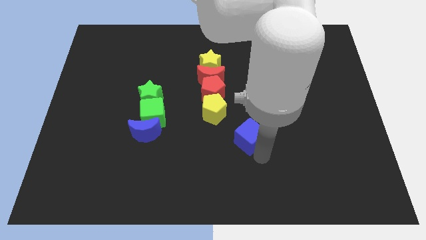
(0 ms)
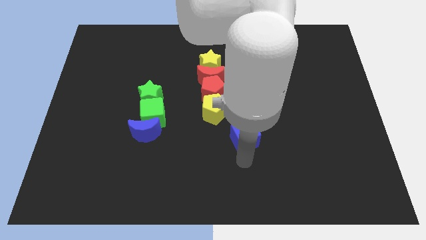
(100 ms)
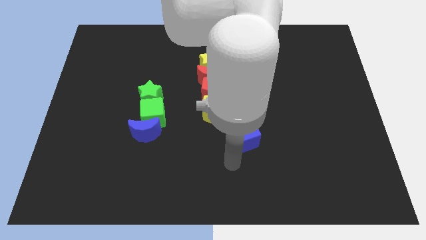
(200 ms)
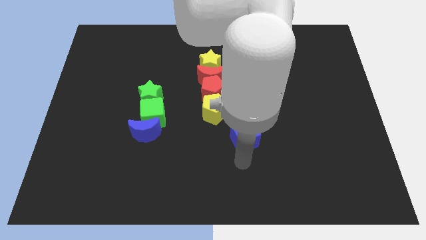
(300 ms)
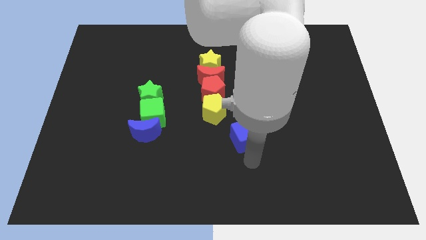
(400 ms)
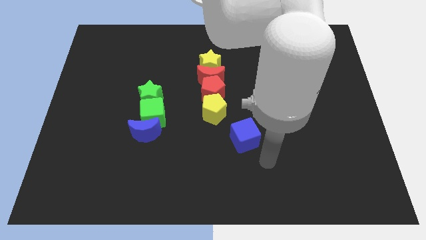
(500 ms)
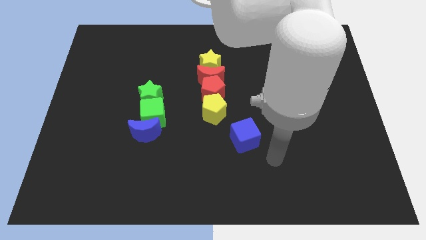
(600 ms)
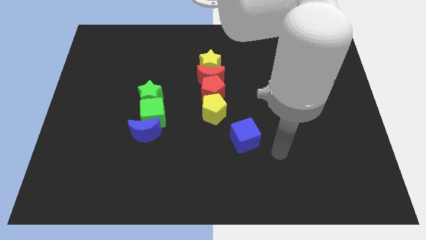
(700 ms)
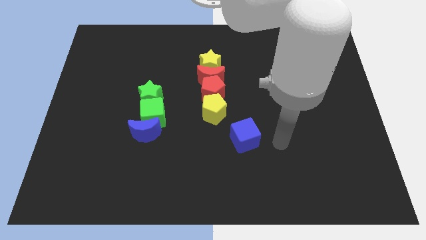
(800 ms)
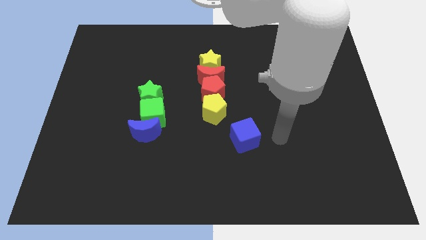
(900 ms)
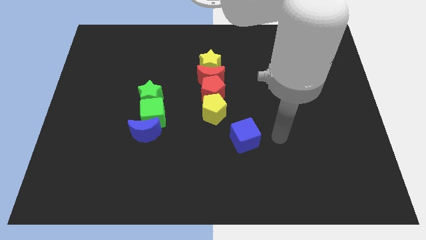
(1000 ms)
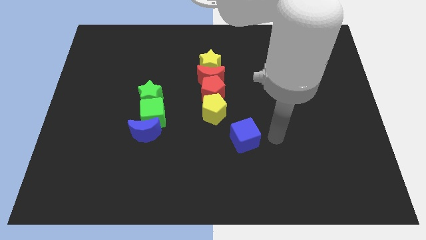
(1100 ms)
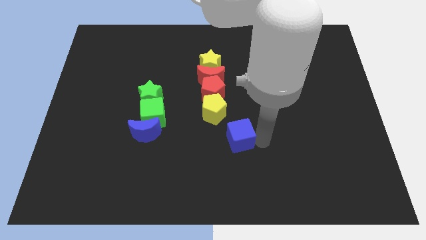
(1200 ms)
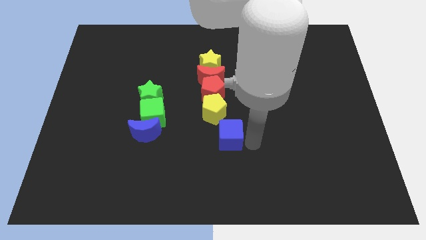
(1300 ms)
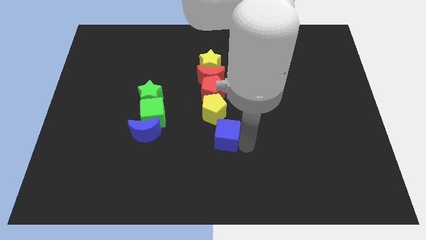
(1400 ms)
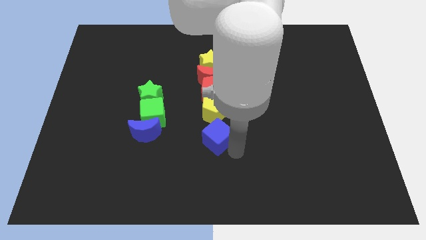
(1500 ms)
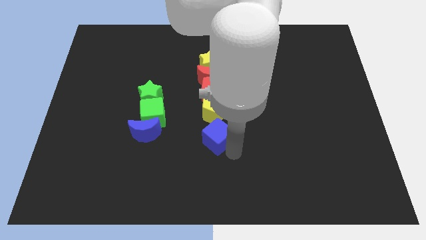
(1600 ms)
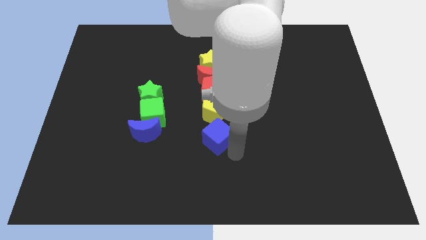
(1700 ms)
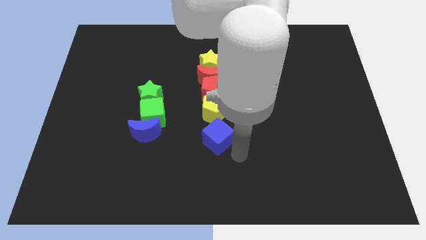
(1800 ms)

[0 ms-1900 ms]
place the blue cube below the yellow pentagon

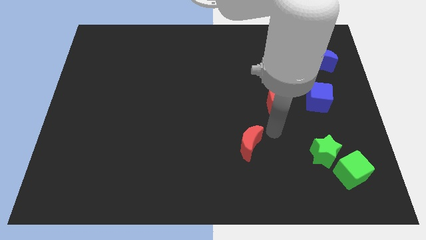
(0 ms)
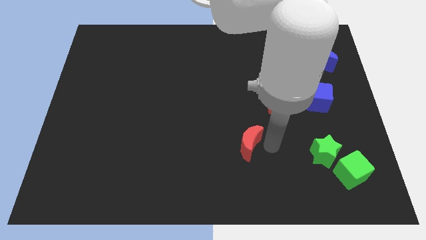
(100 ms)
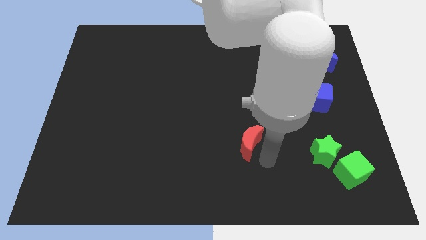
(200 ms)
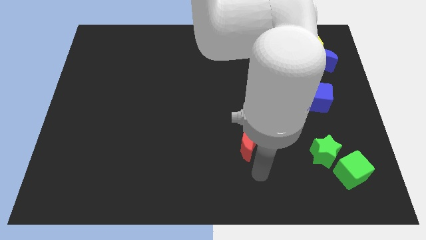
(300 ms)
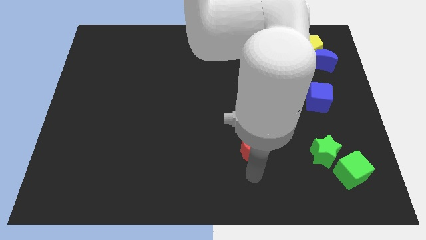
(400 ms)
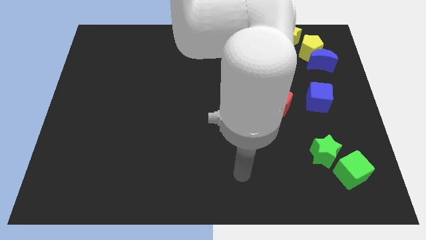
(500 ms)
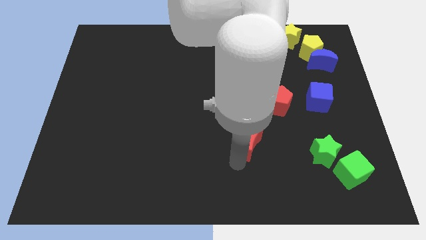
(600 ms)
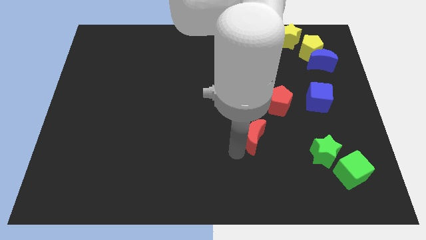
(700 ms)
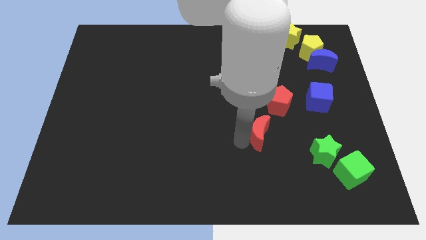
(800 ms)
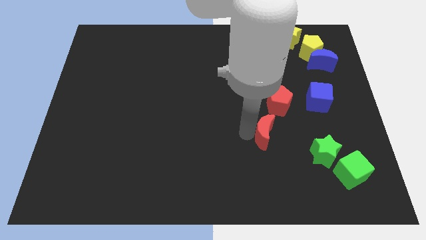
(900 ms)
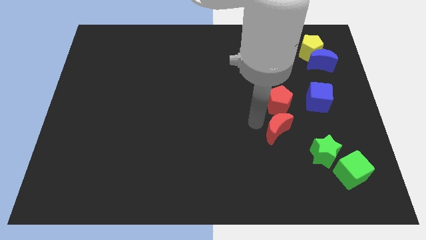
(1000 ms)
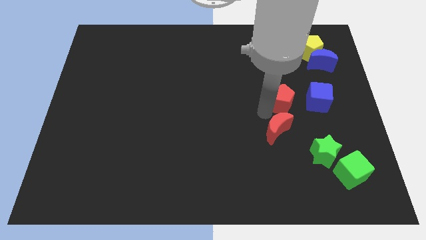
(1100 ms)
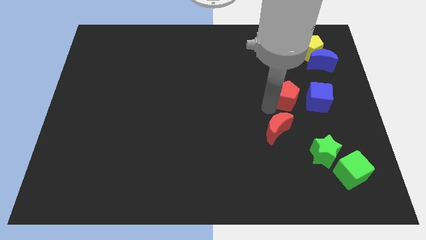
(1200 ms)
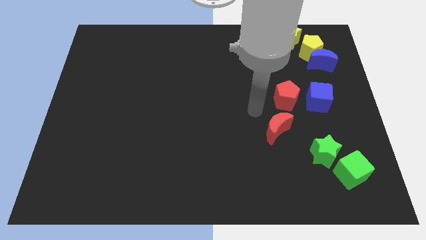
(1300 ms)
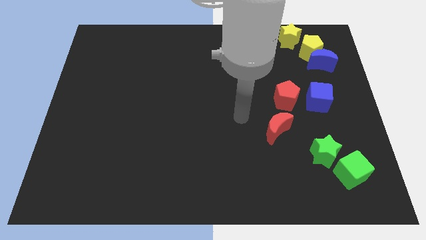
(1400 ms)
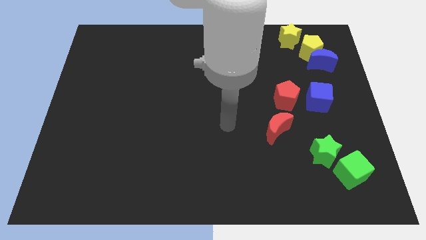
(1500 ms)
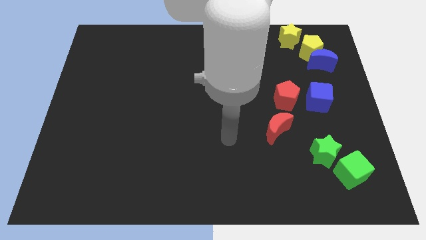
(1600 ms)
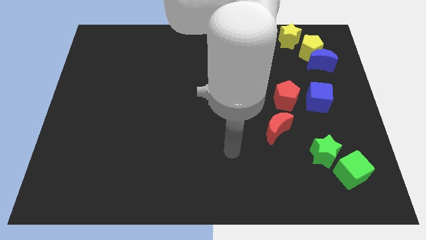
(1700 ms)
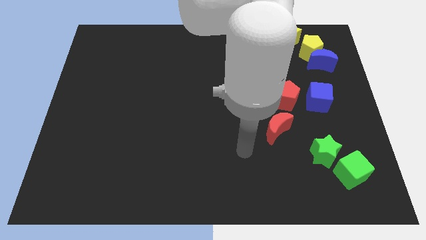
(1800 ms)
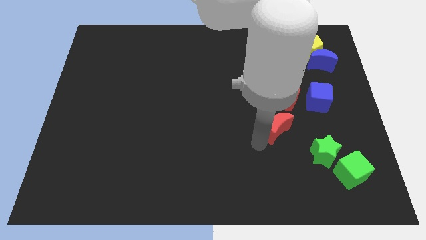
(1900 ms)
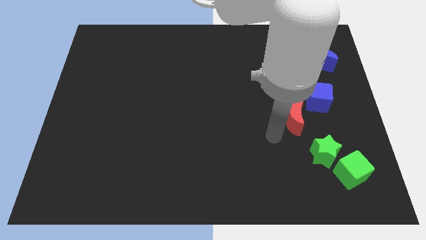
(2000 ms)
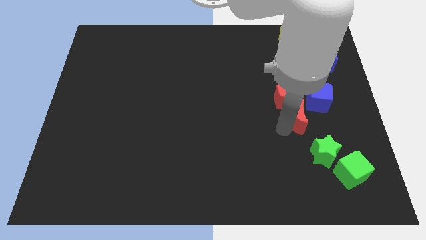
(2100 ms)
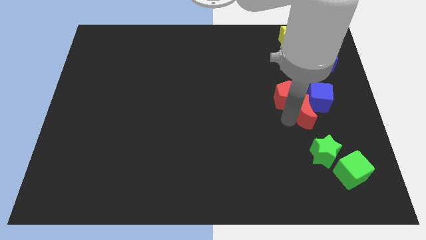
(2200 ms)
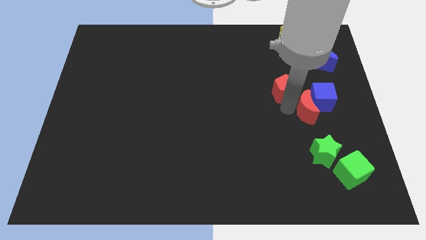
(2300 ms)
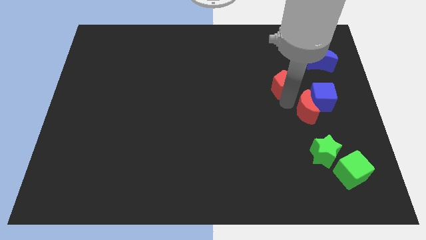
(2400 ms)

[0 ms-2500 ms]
move the red crescent into the blue cube

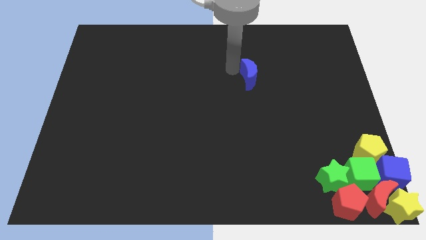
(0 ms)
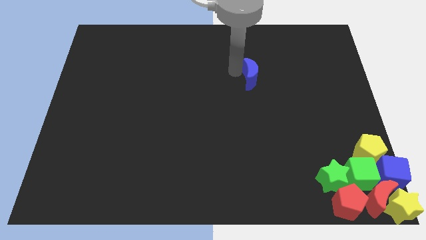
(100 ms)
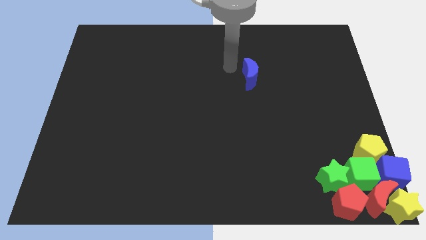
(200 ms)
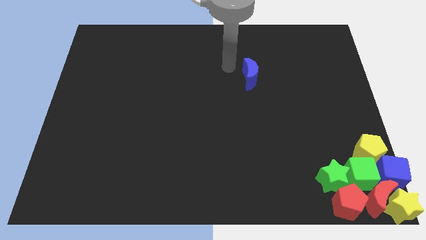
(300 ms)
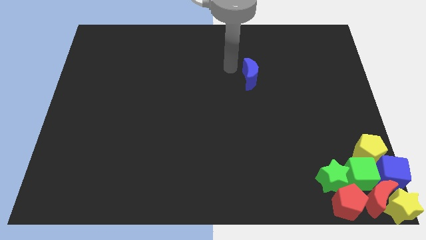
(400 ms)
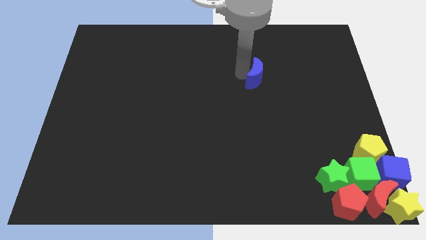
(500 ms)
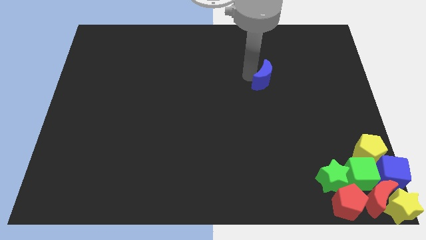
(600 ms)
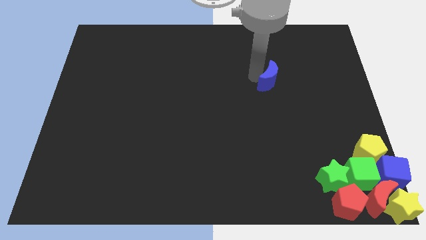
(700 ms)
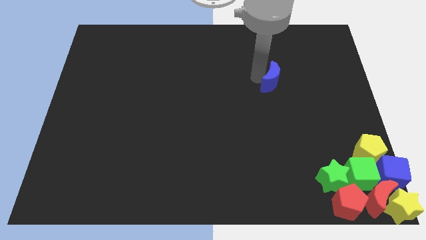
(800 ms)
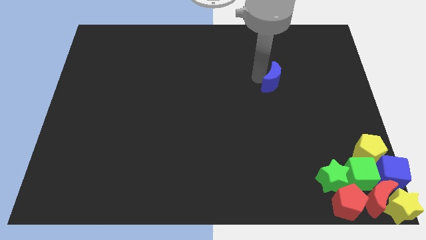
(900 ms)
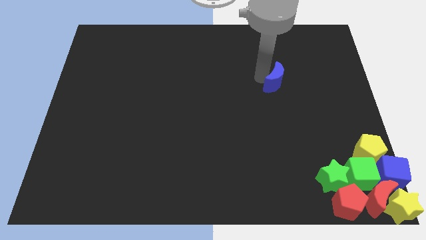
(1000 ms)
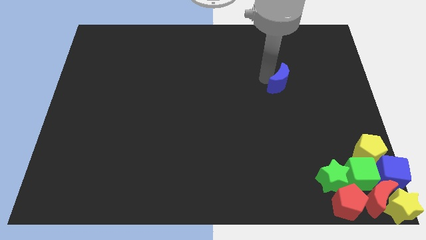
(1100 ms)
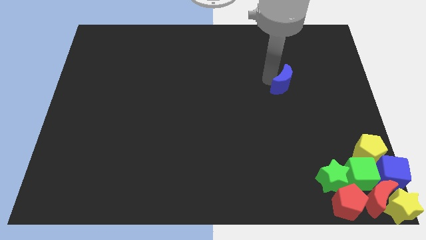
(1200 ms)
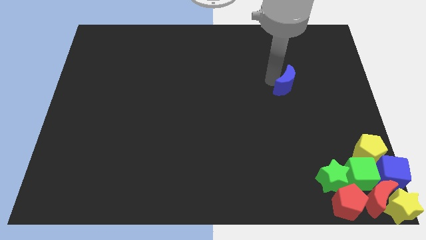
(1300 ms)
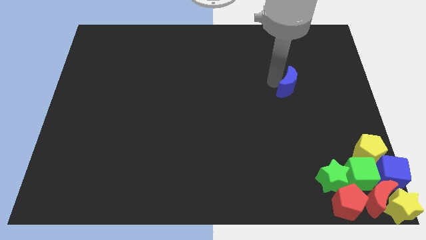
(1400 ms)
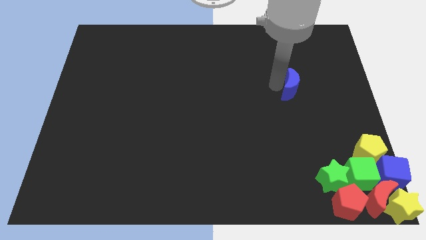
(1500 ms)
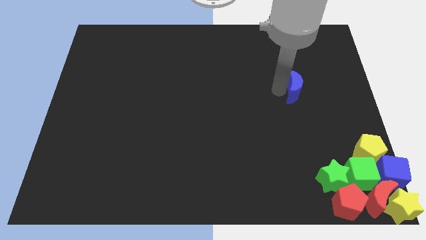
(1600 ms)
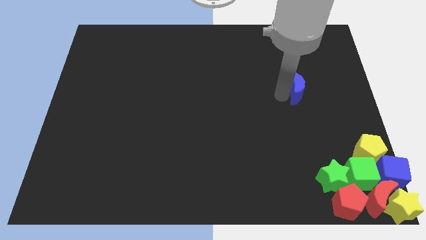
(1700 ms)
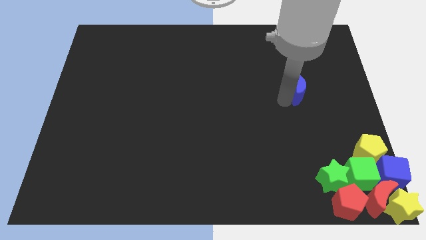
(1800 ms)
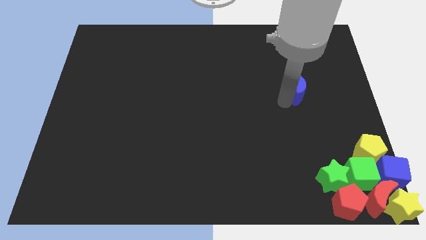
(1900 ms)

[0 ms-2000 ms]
push blue crescent slightly down

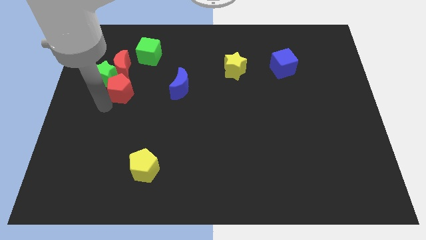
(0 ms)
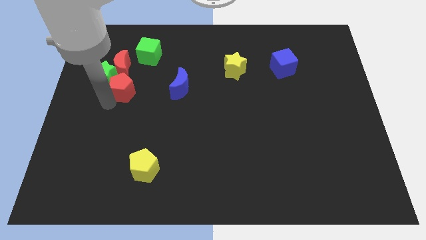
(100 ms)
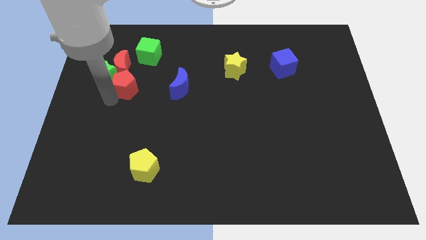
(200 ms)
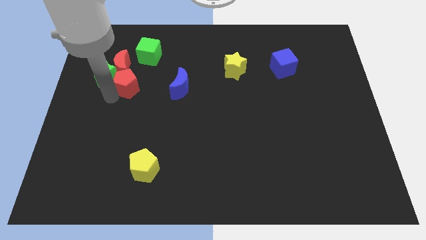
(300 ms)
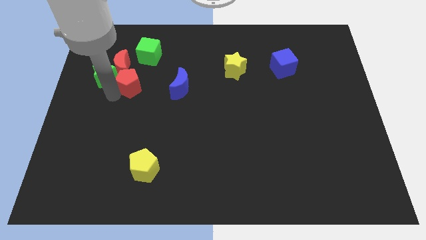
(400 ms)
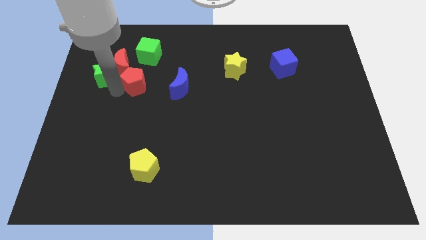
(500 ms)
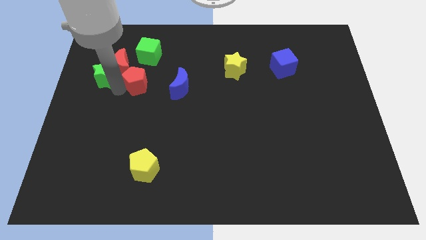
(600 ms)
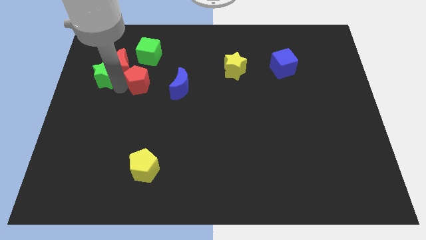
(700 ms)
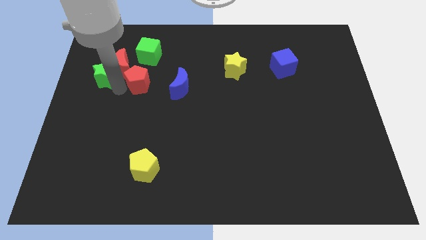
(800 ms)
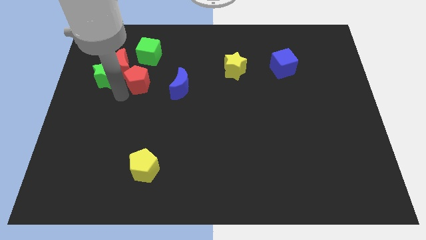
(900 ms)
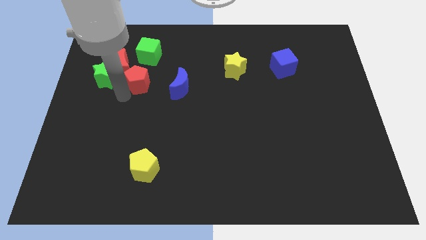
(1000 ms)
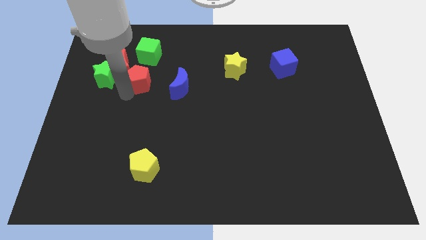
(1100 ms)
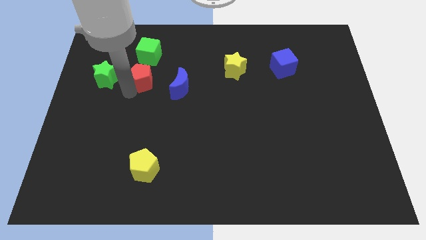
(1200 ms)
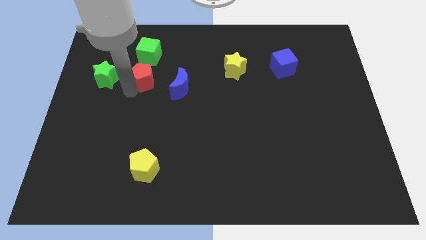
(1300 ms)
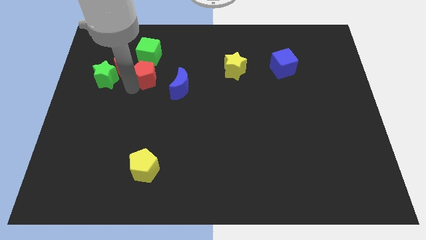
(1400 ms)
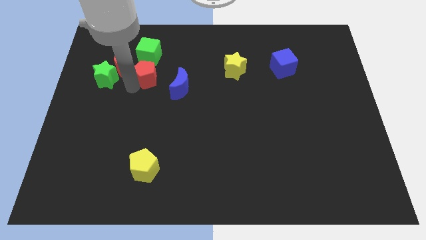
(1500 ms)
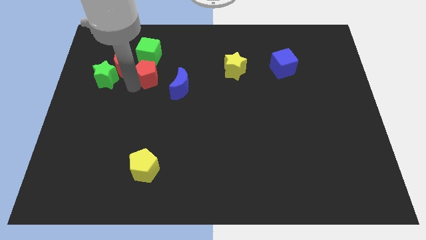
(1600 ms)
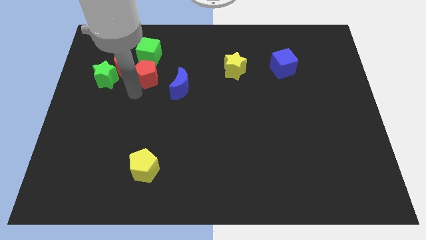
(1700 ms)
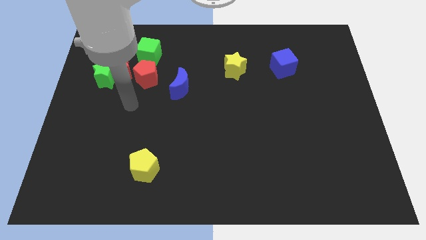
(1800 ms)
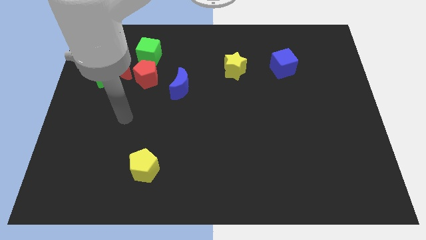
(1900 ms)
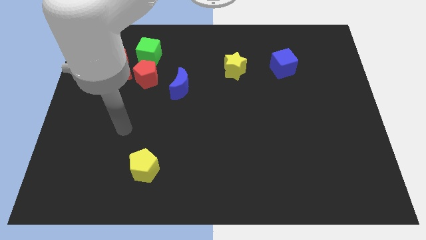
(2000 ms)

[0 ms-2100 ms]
place red pentagon underneath the green cube

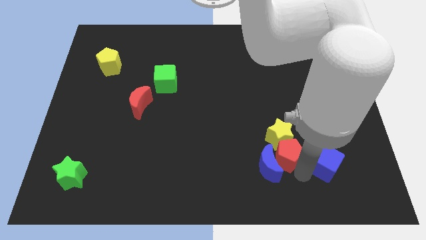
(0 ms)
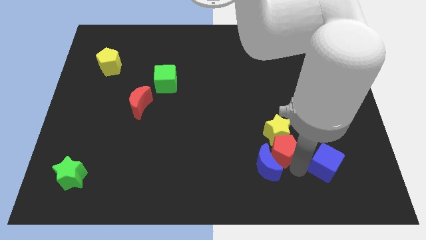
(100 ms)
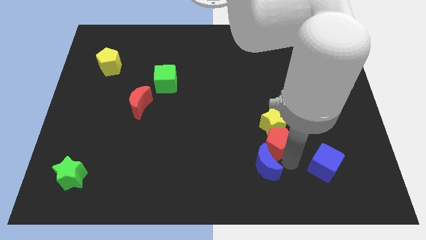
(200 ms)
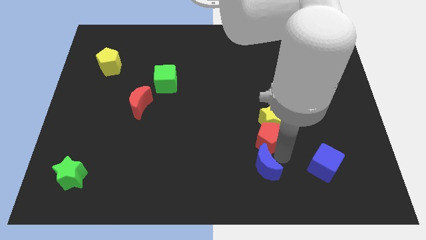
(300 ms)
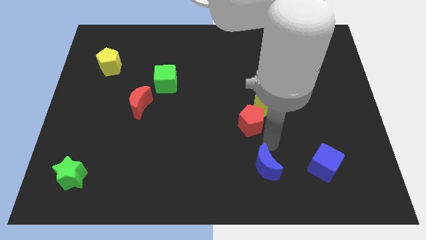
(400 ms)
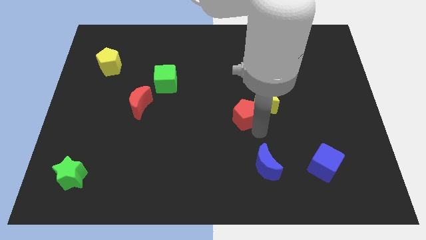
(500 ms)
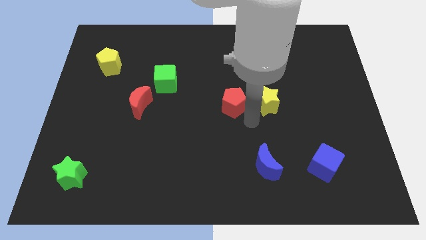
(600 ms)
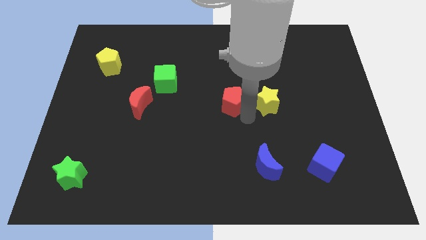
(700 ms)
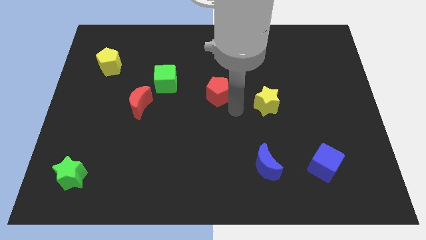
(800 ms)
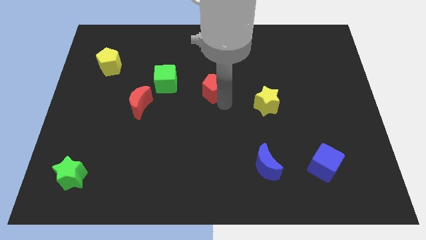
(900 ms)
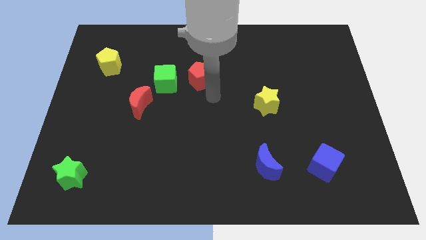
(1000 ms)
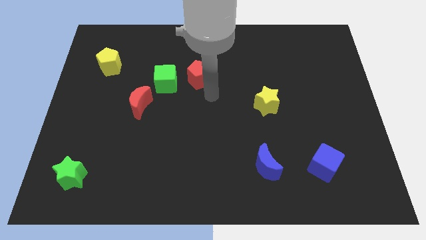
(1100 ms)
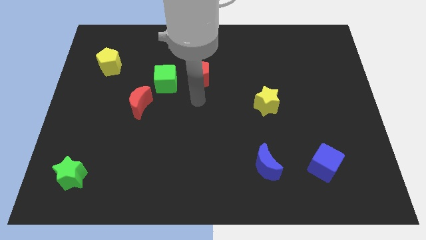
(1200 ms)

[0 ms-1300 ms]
push the red pentagon to the right of the green cube
